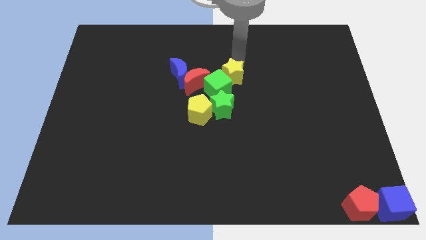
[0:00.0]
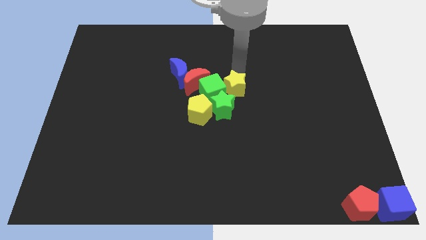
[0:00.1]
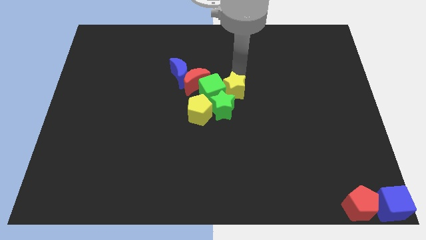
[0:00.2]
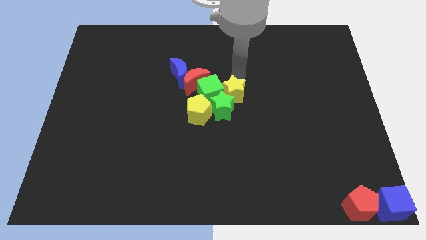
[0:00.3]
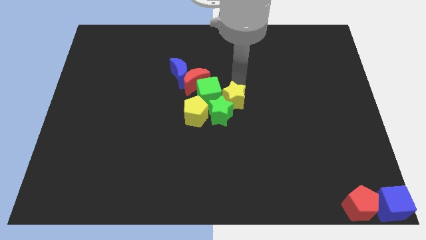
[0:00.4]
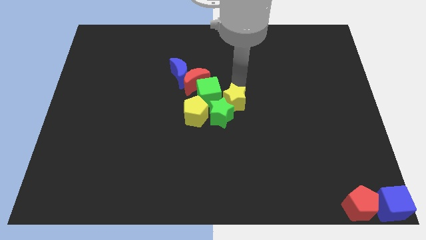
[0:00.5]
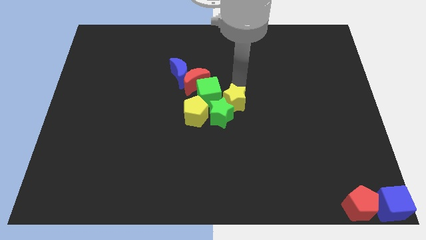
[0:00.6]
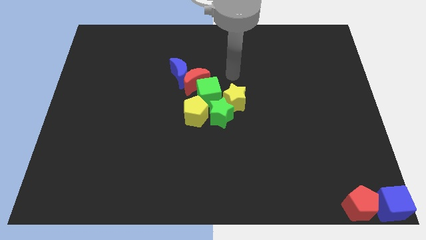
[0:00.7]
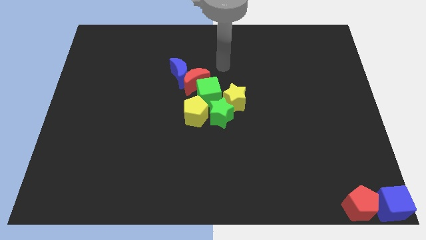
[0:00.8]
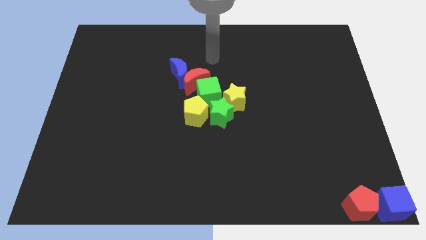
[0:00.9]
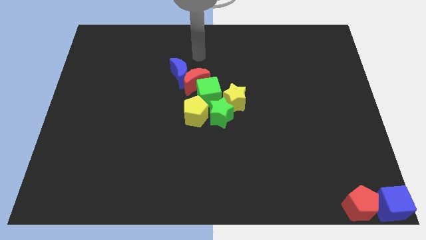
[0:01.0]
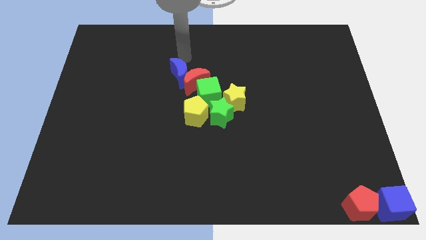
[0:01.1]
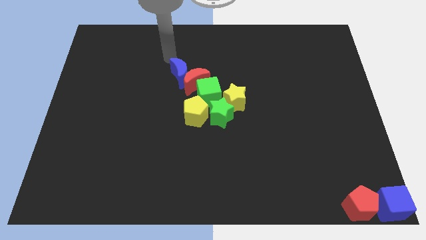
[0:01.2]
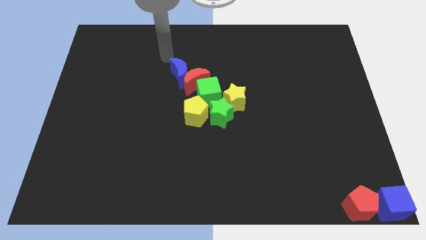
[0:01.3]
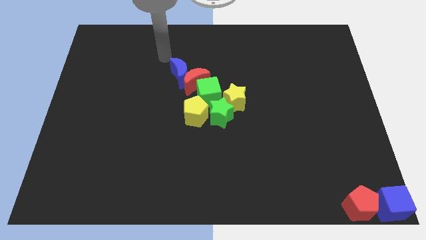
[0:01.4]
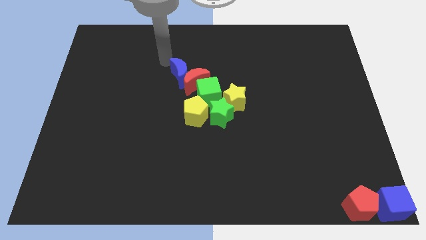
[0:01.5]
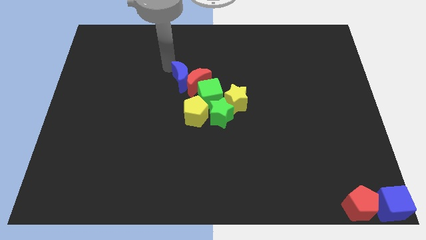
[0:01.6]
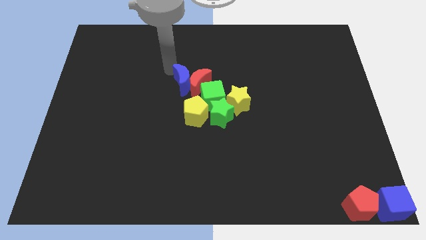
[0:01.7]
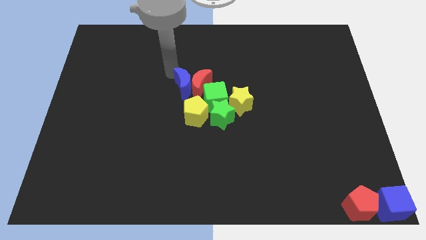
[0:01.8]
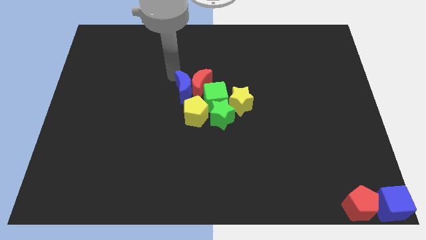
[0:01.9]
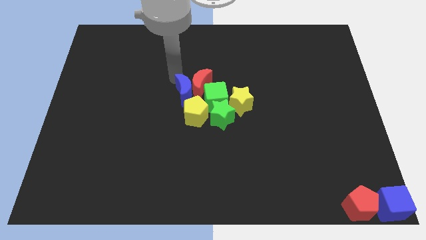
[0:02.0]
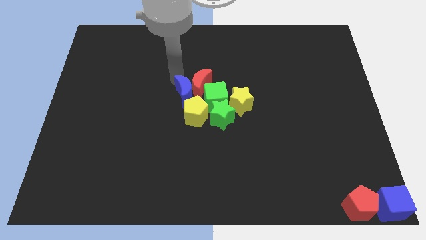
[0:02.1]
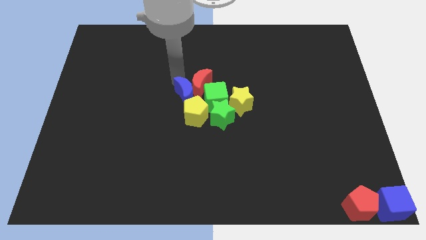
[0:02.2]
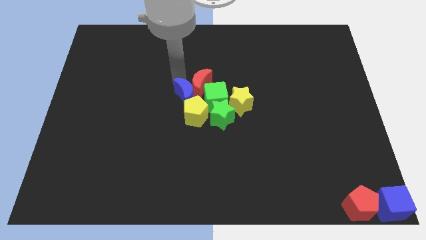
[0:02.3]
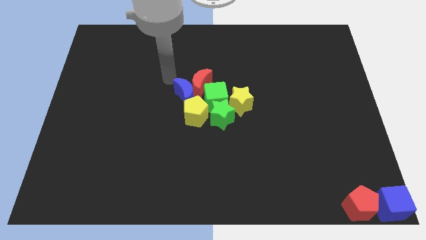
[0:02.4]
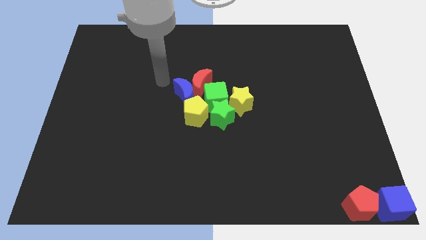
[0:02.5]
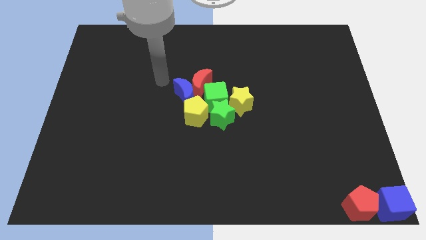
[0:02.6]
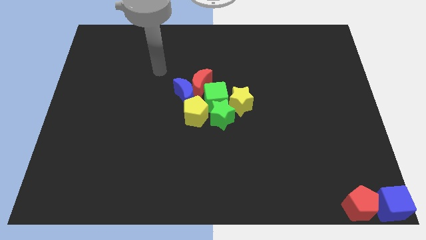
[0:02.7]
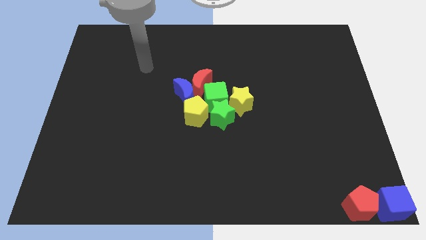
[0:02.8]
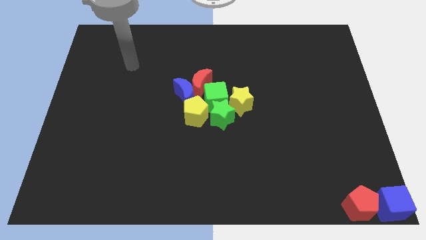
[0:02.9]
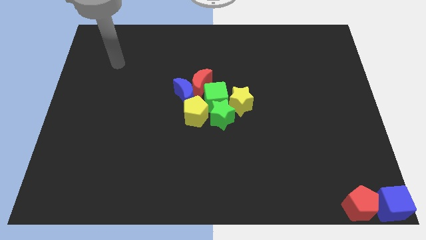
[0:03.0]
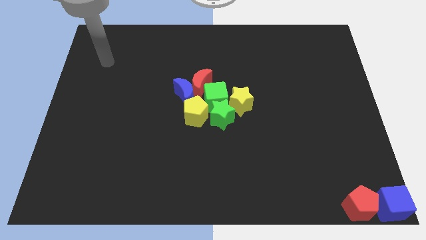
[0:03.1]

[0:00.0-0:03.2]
push the blue moon into the group of blocks

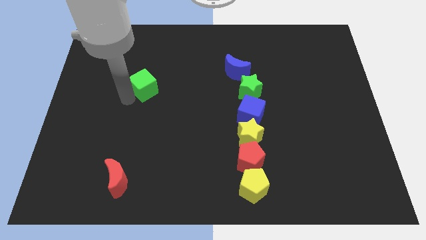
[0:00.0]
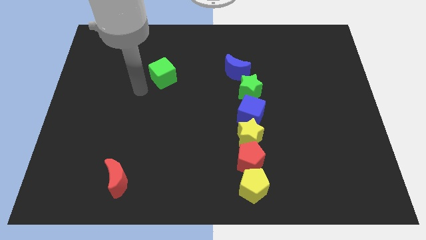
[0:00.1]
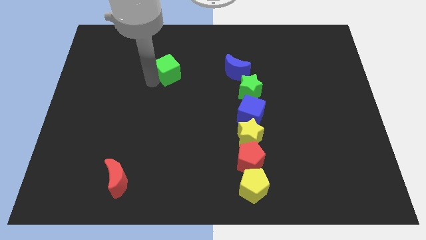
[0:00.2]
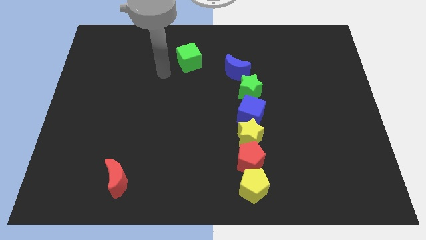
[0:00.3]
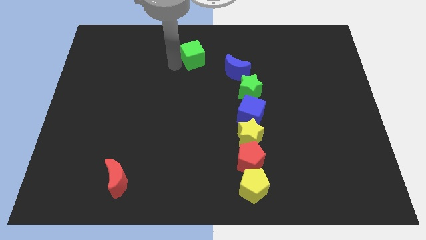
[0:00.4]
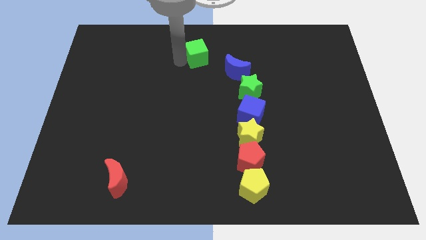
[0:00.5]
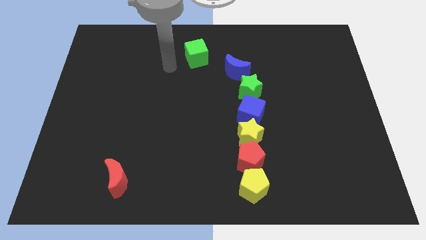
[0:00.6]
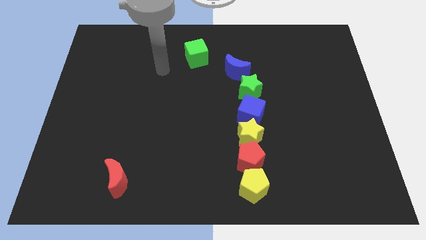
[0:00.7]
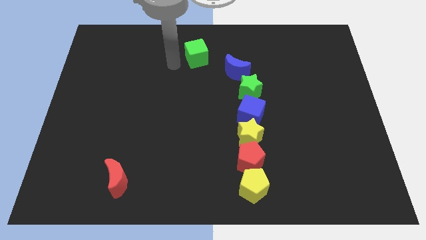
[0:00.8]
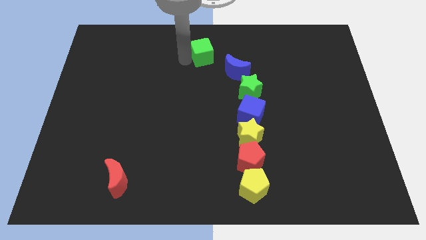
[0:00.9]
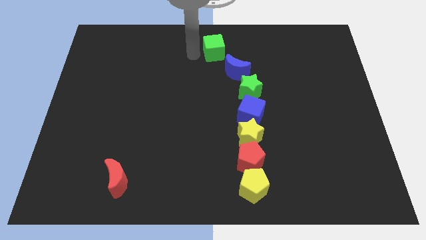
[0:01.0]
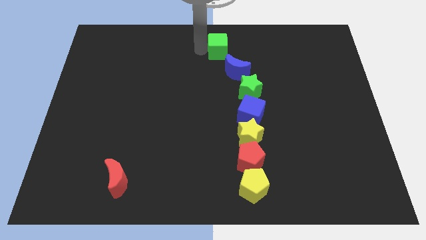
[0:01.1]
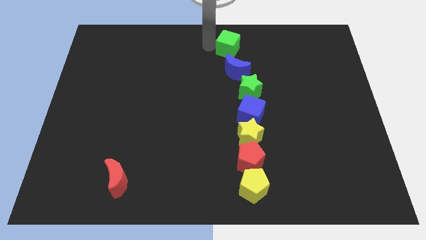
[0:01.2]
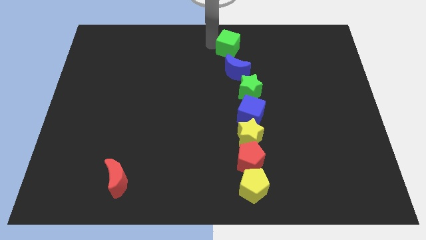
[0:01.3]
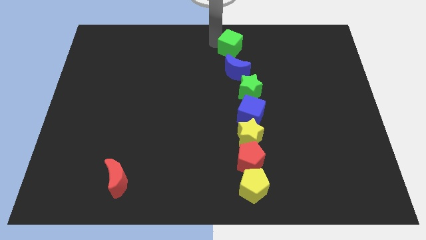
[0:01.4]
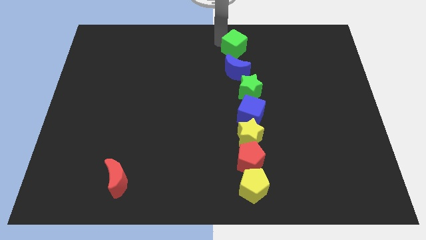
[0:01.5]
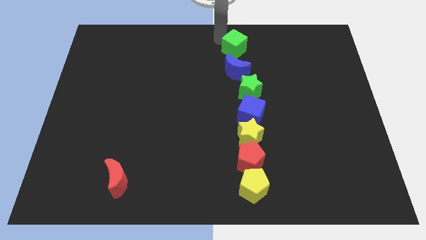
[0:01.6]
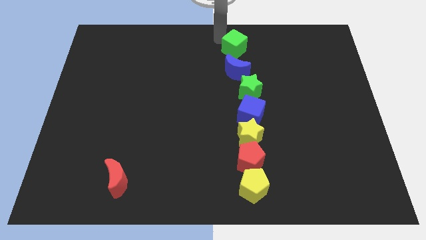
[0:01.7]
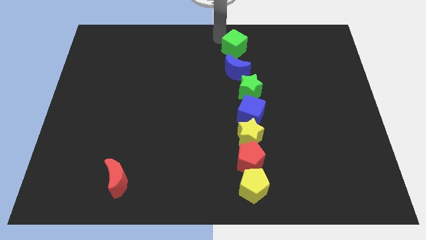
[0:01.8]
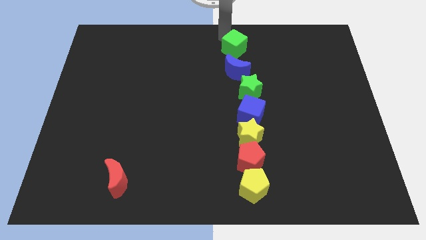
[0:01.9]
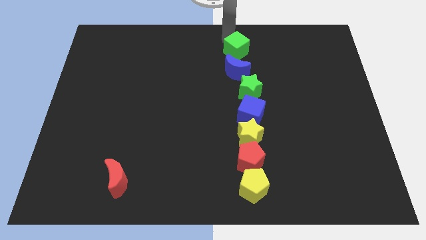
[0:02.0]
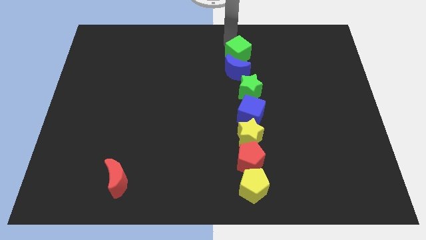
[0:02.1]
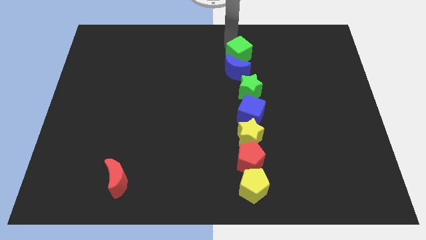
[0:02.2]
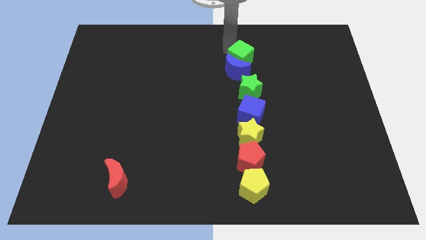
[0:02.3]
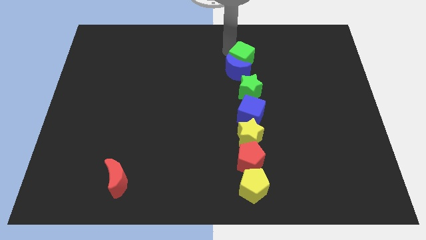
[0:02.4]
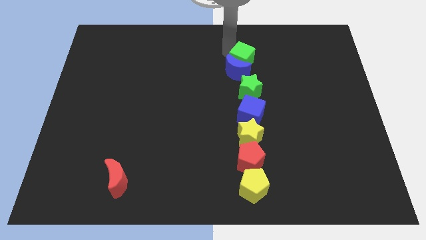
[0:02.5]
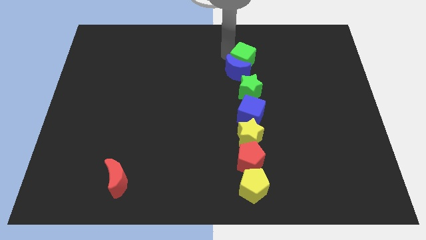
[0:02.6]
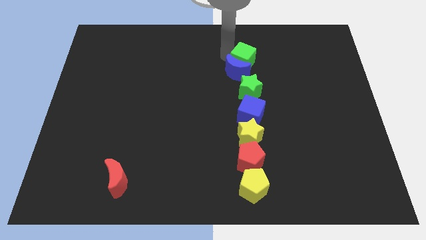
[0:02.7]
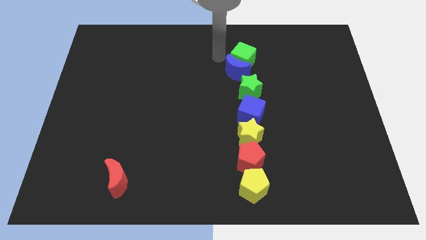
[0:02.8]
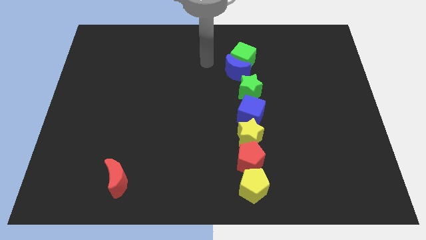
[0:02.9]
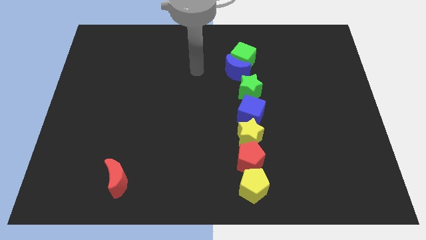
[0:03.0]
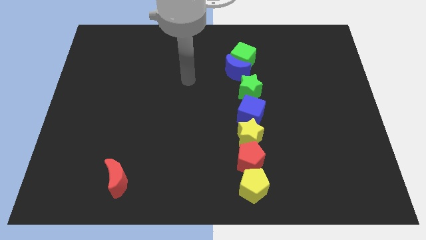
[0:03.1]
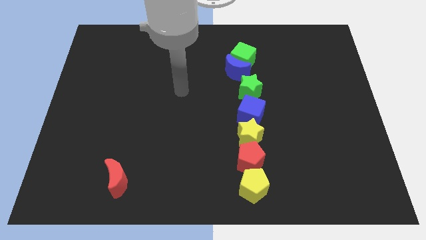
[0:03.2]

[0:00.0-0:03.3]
slide the green cube into the top side of the blue moon

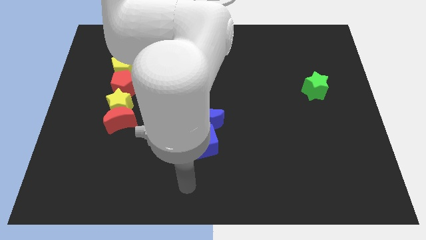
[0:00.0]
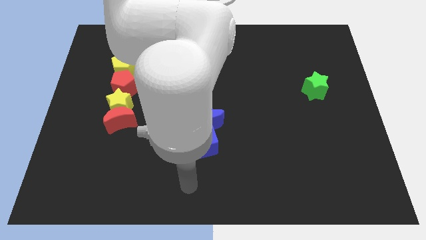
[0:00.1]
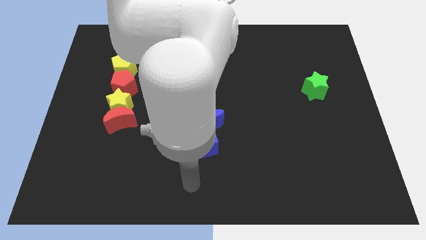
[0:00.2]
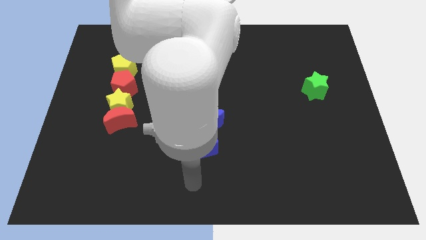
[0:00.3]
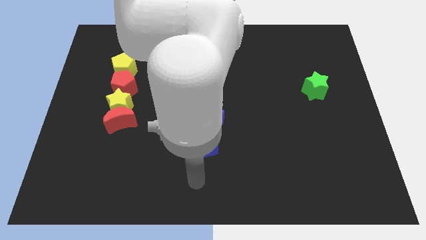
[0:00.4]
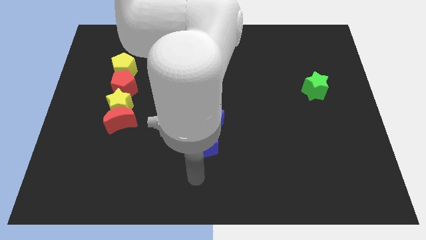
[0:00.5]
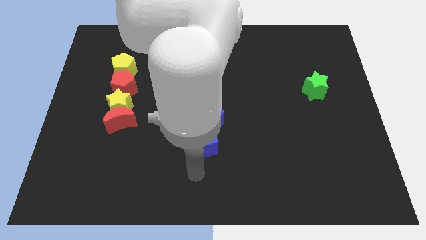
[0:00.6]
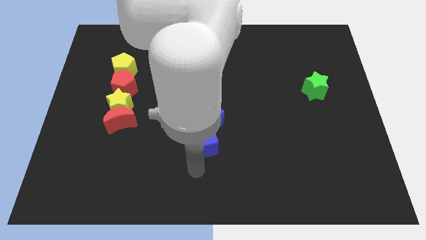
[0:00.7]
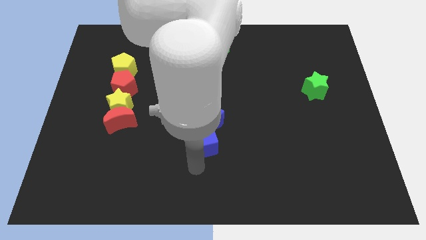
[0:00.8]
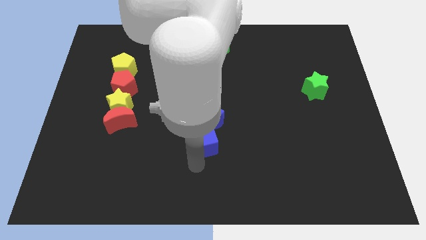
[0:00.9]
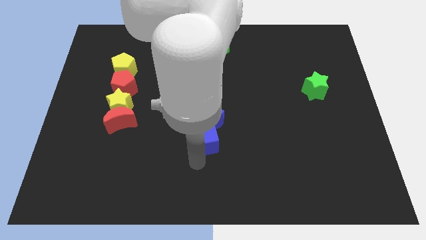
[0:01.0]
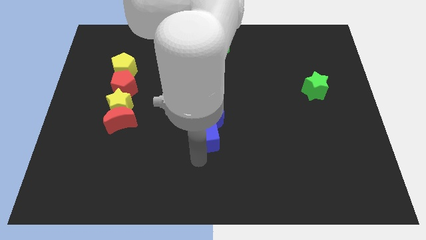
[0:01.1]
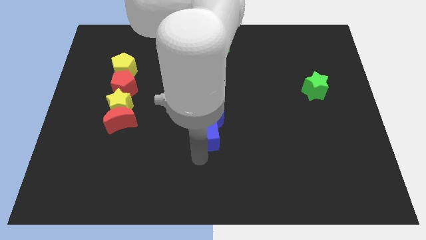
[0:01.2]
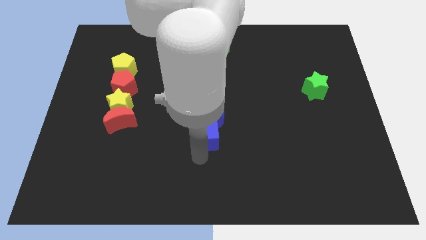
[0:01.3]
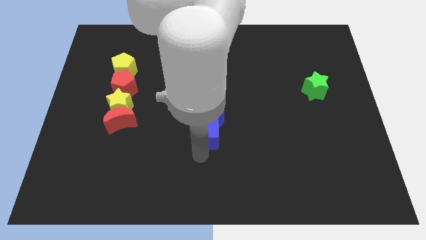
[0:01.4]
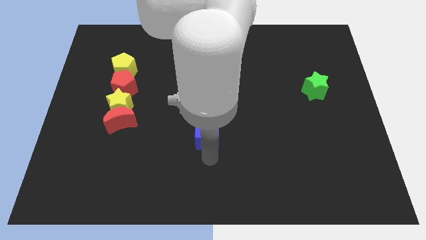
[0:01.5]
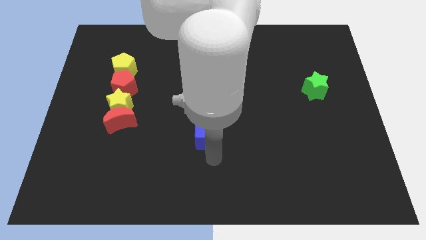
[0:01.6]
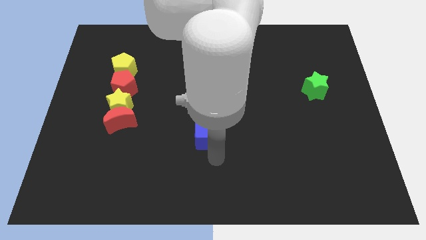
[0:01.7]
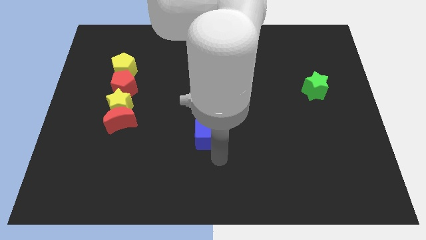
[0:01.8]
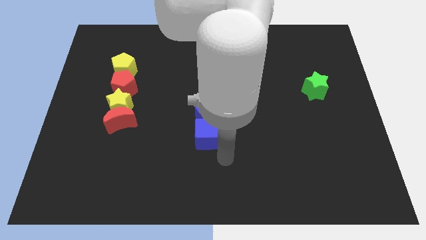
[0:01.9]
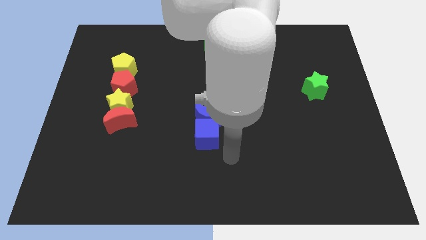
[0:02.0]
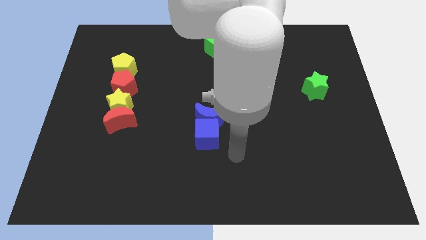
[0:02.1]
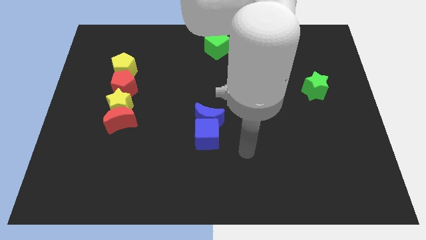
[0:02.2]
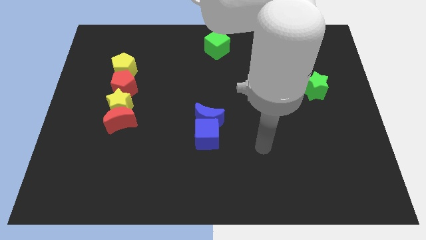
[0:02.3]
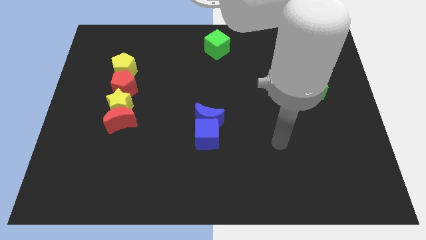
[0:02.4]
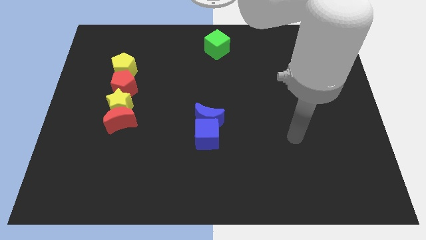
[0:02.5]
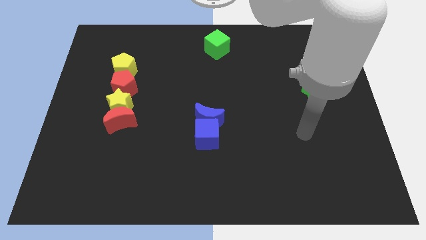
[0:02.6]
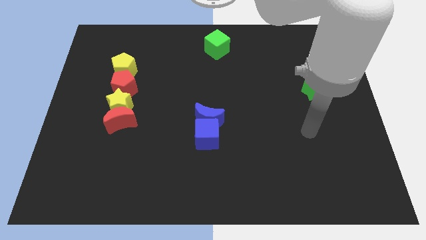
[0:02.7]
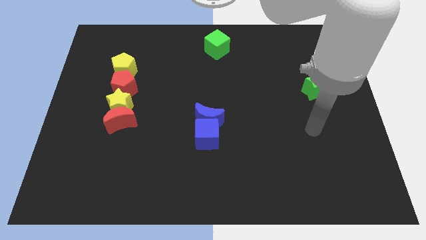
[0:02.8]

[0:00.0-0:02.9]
push the blue cube into the blue moon
